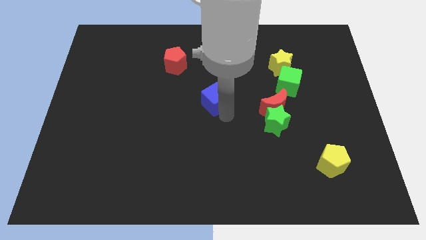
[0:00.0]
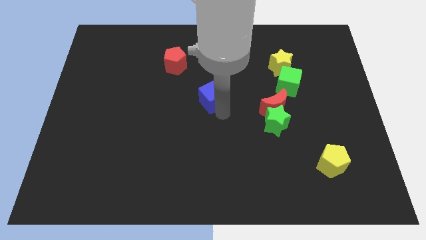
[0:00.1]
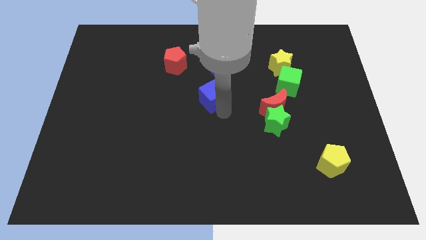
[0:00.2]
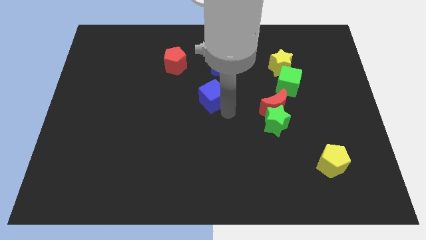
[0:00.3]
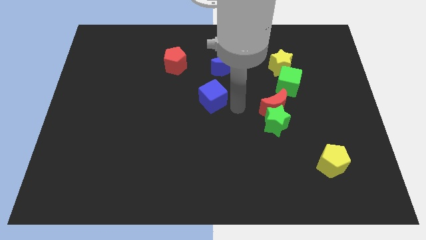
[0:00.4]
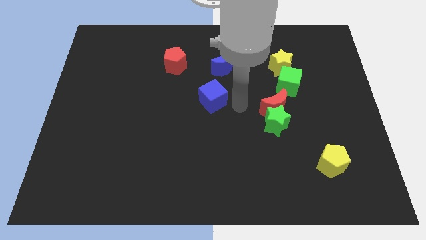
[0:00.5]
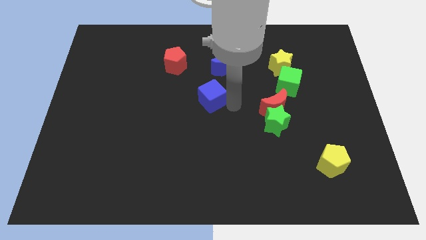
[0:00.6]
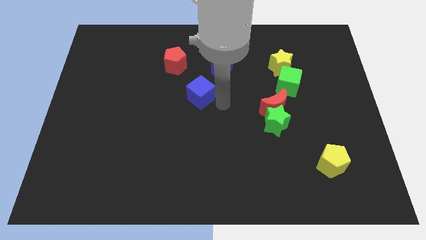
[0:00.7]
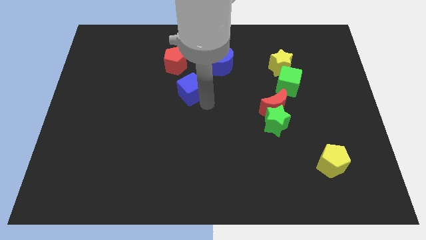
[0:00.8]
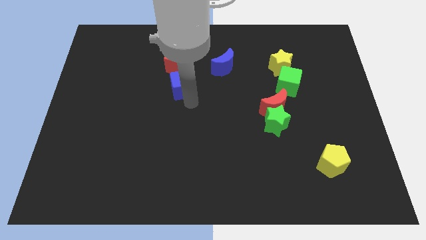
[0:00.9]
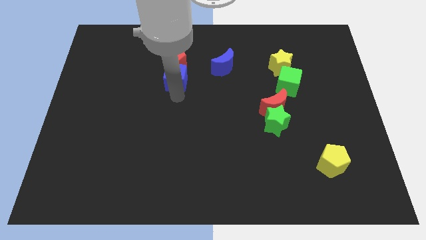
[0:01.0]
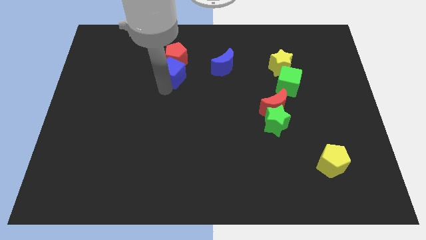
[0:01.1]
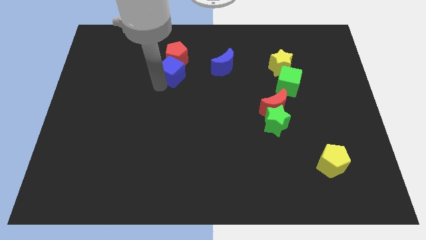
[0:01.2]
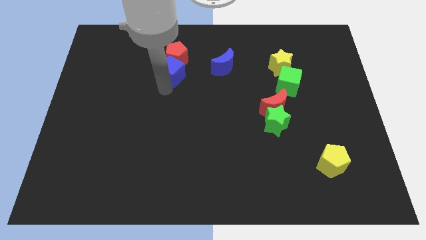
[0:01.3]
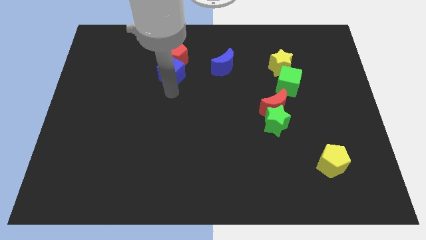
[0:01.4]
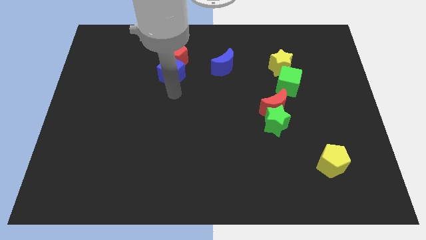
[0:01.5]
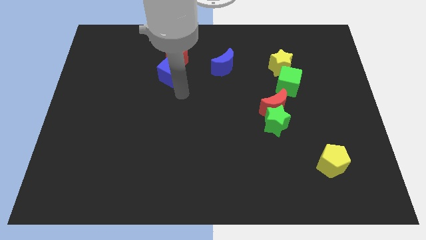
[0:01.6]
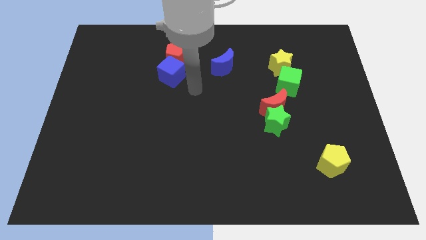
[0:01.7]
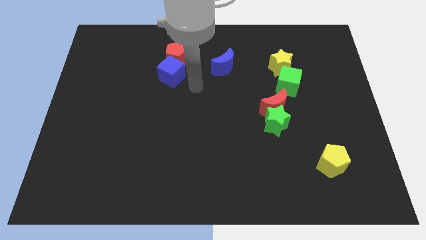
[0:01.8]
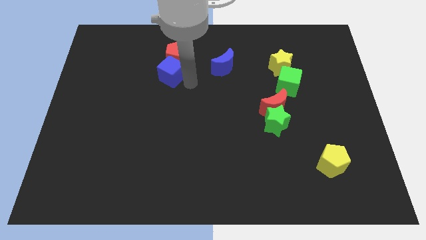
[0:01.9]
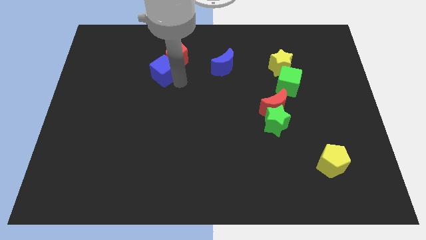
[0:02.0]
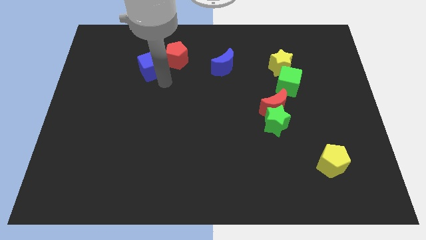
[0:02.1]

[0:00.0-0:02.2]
move the blue cube towards the red pentagon

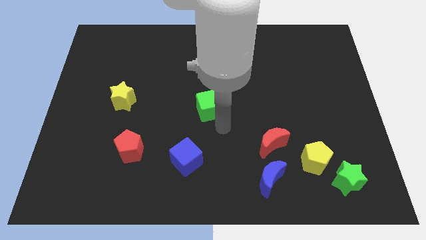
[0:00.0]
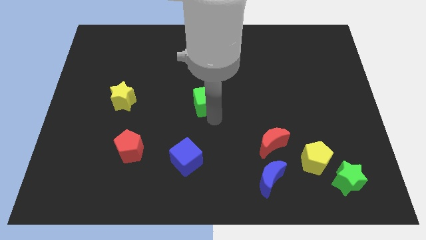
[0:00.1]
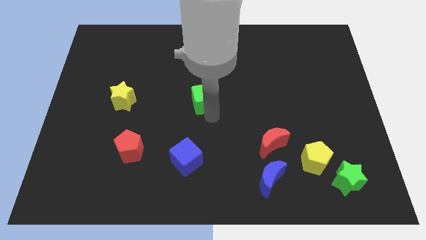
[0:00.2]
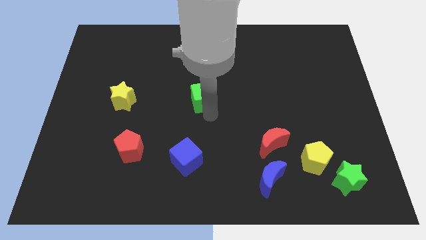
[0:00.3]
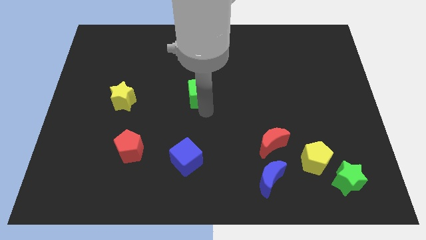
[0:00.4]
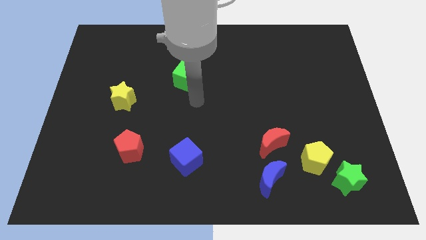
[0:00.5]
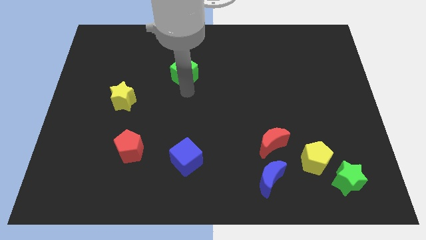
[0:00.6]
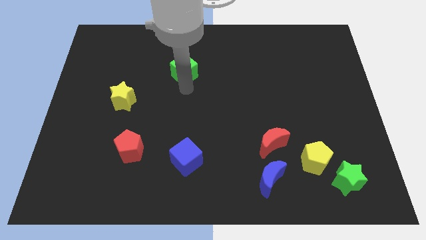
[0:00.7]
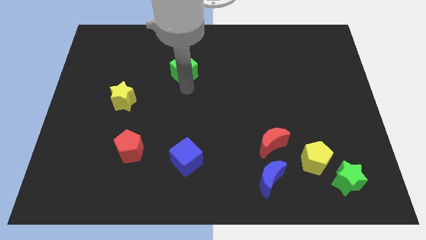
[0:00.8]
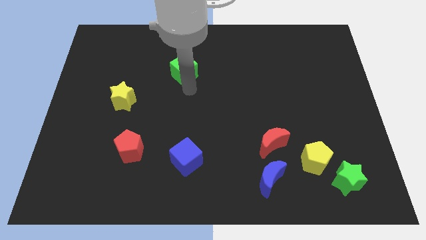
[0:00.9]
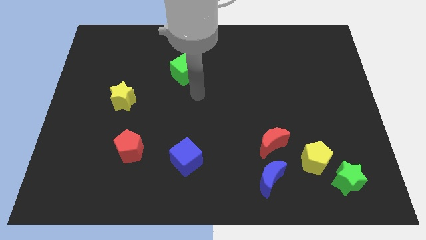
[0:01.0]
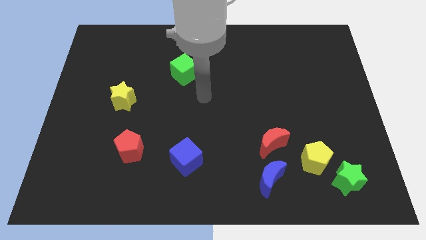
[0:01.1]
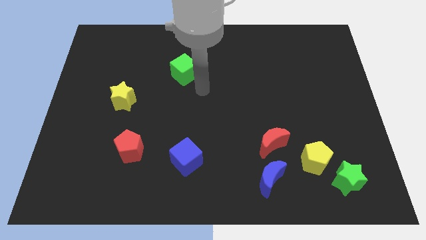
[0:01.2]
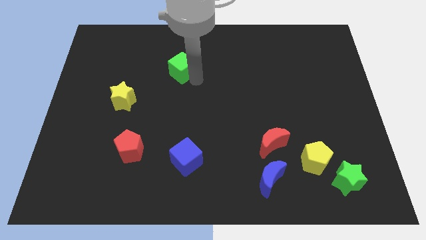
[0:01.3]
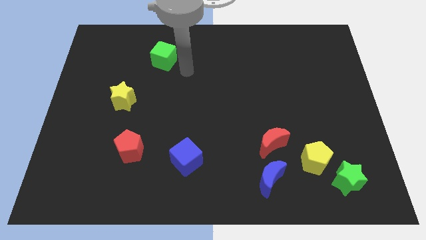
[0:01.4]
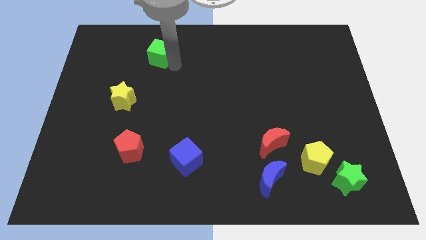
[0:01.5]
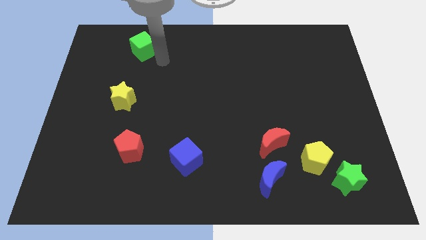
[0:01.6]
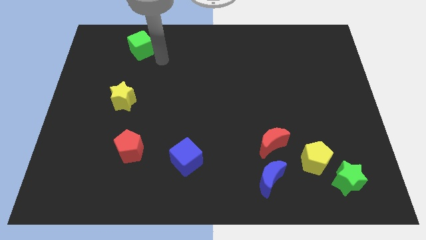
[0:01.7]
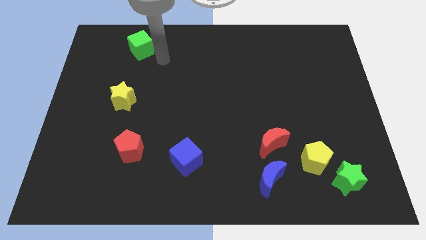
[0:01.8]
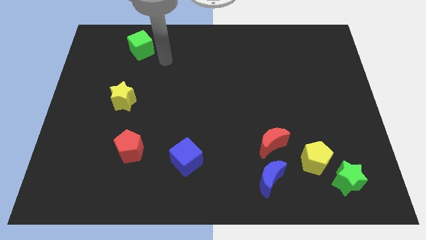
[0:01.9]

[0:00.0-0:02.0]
slide the green cube vertically above the yellow star

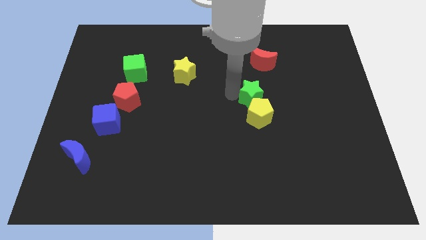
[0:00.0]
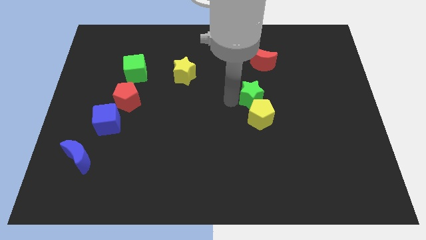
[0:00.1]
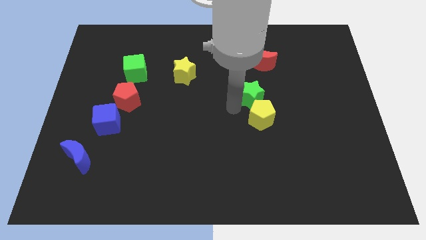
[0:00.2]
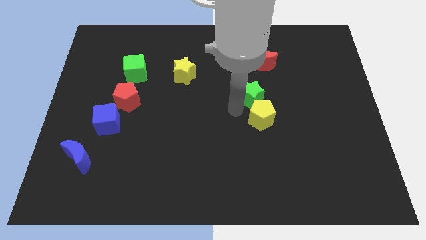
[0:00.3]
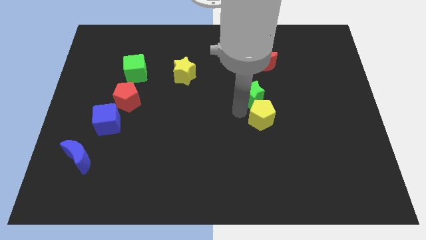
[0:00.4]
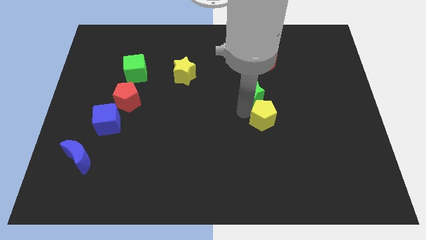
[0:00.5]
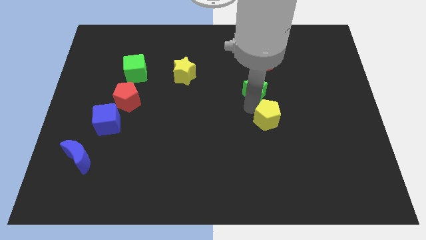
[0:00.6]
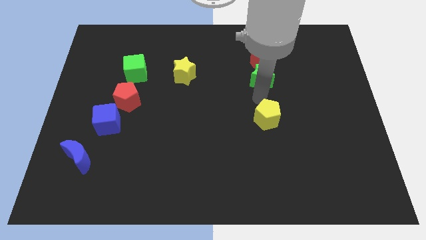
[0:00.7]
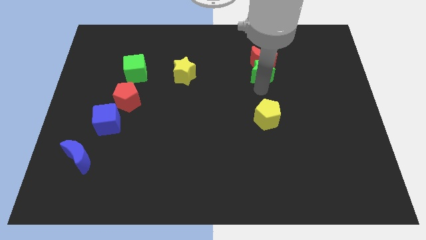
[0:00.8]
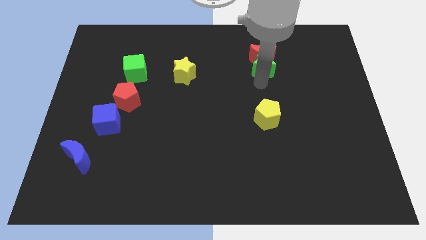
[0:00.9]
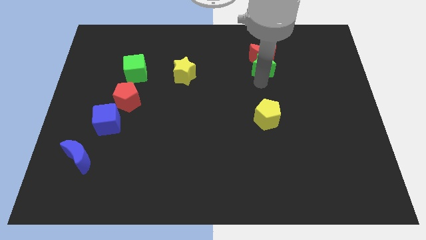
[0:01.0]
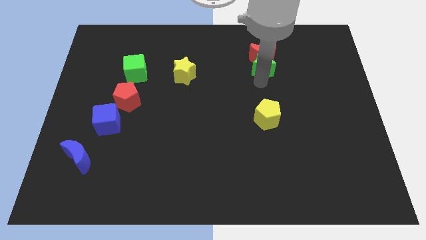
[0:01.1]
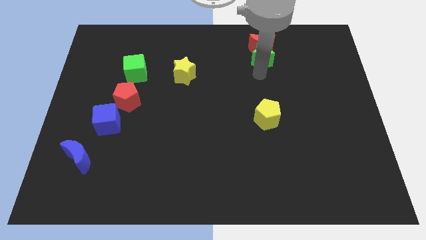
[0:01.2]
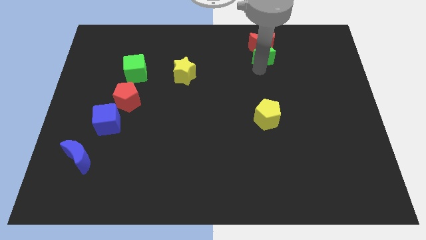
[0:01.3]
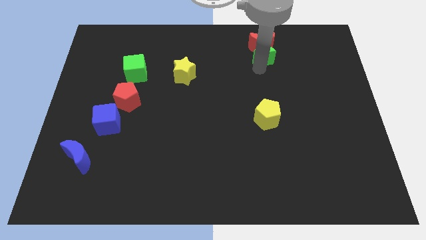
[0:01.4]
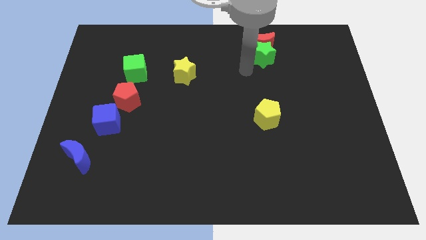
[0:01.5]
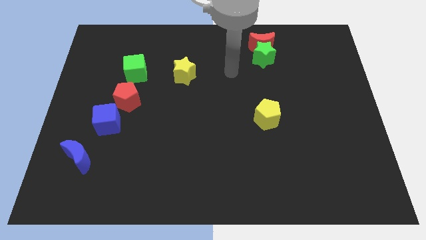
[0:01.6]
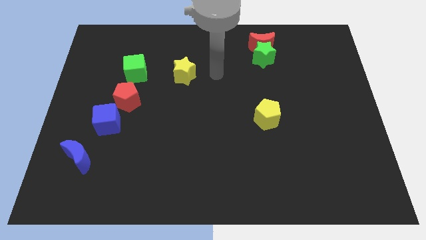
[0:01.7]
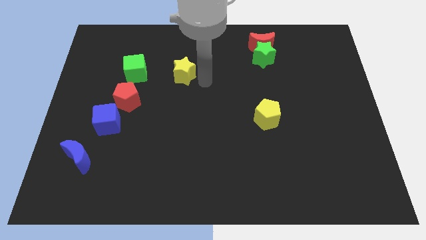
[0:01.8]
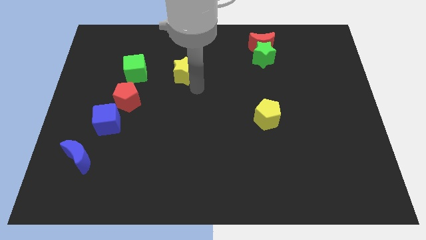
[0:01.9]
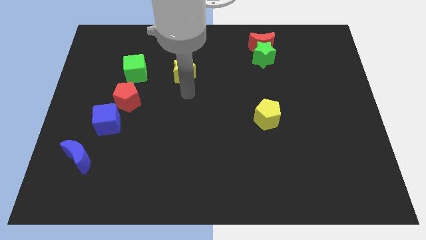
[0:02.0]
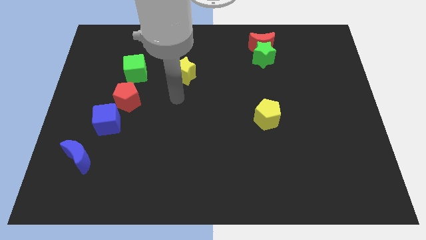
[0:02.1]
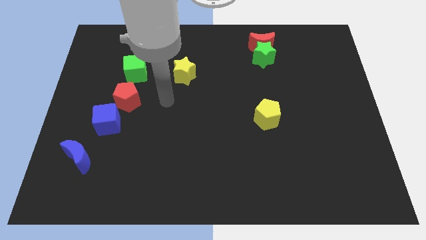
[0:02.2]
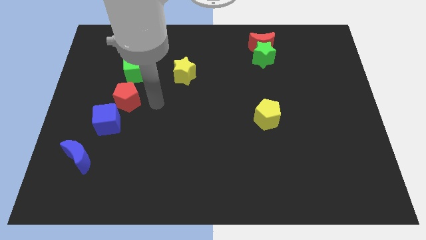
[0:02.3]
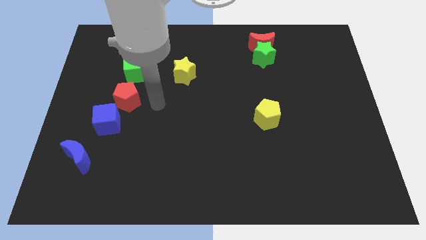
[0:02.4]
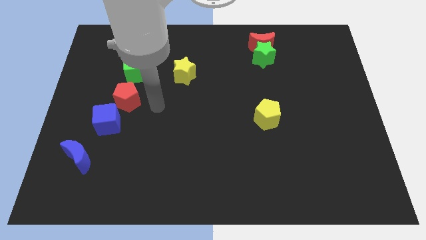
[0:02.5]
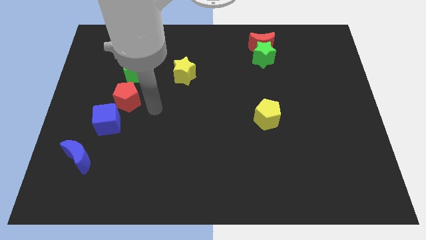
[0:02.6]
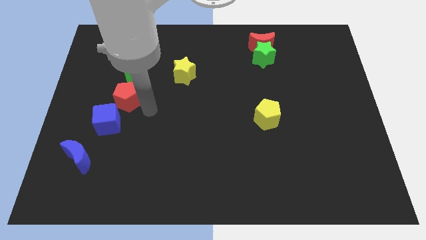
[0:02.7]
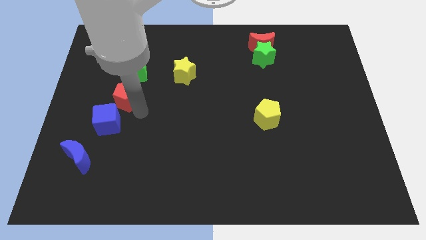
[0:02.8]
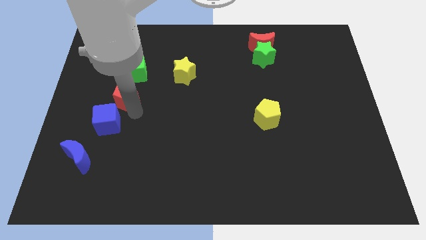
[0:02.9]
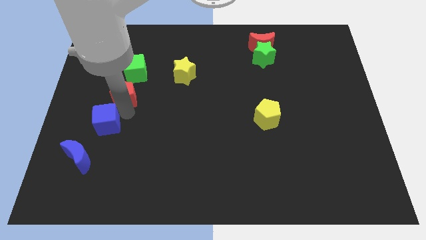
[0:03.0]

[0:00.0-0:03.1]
push green star and red crescent to the right top

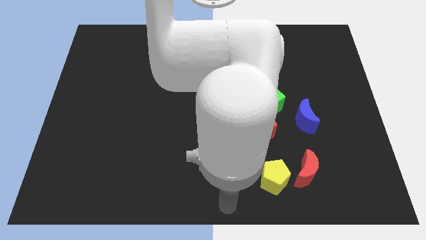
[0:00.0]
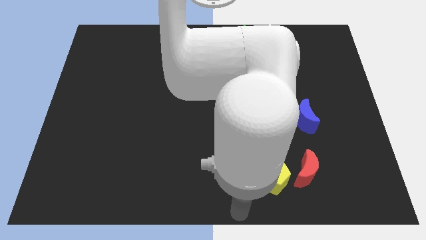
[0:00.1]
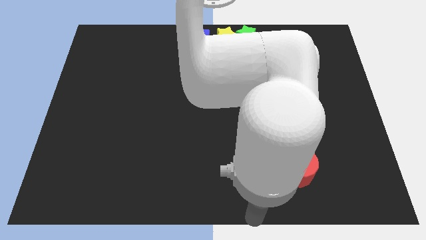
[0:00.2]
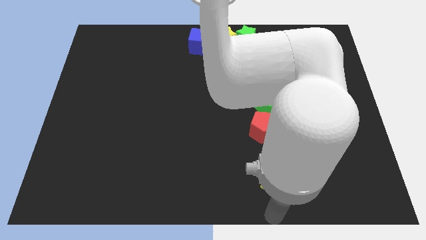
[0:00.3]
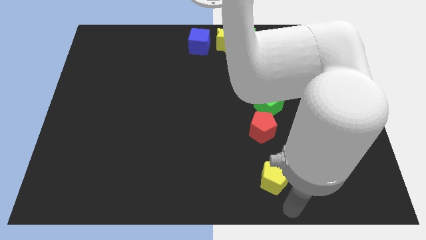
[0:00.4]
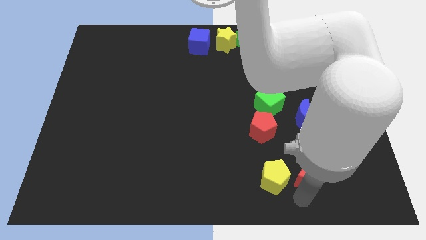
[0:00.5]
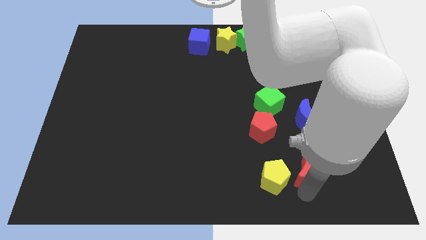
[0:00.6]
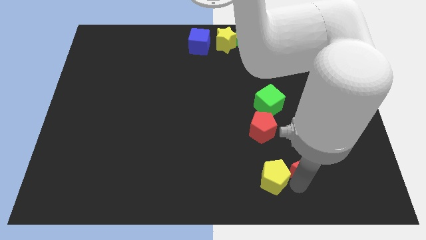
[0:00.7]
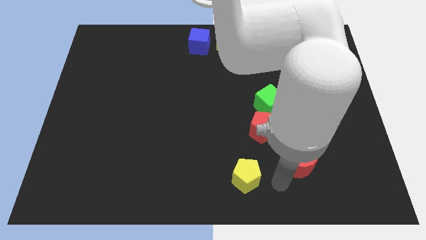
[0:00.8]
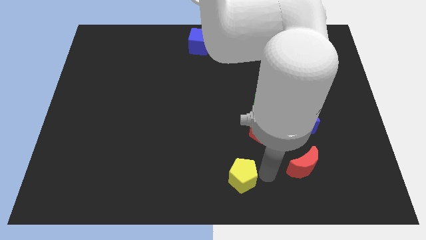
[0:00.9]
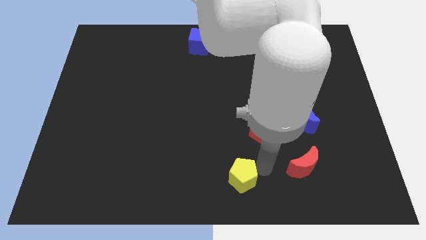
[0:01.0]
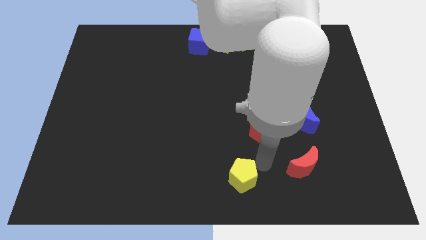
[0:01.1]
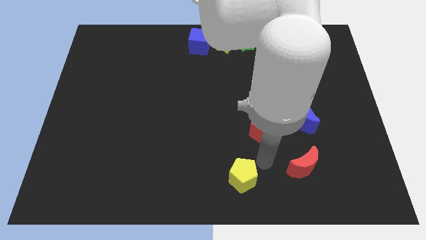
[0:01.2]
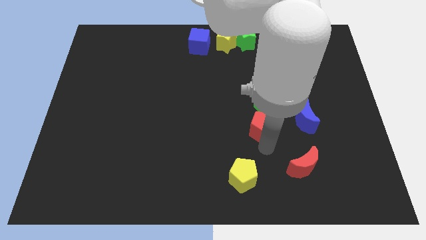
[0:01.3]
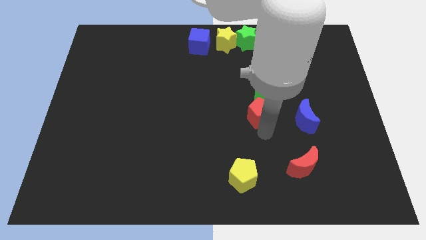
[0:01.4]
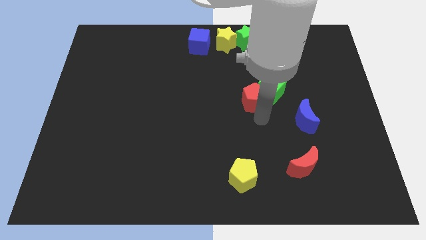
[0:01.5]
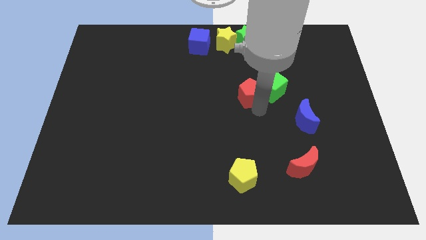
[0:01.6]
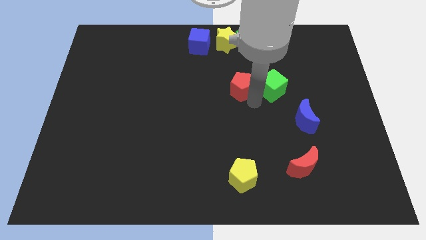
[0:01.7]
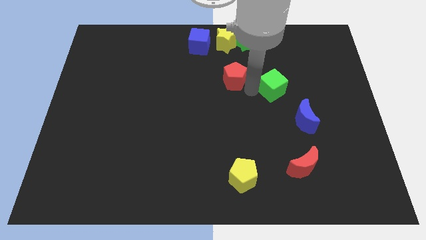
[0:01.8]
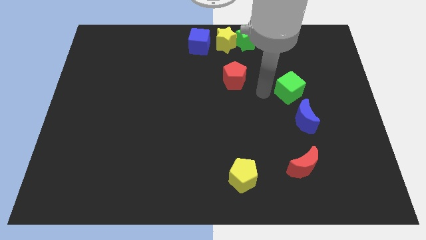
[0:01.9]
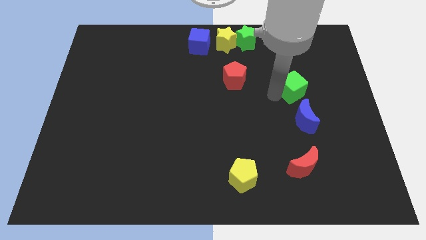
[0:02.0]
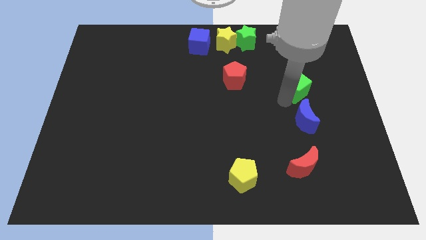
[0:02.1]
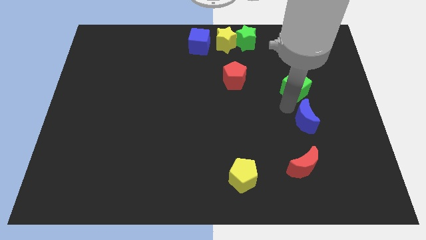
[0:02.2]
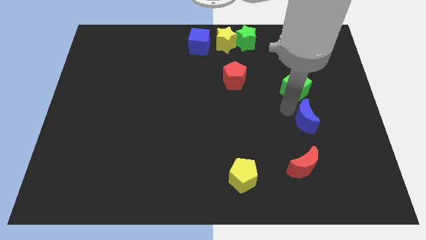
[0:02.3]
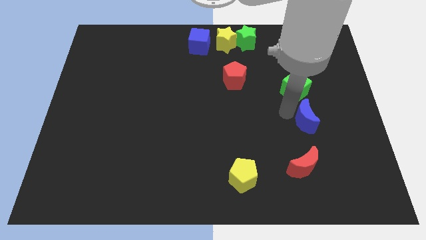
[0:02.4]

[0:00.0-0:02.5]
separate the red pentagon and green cube
